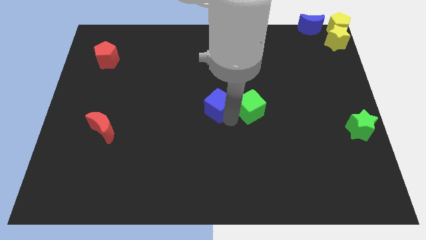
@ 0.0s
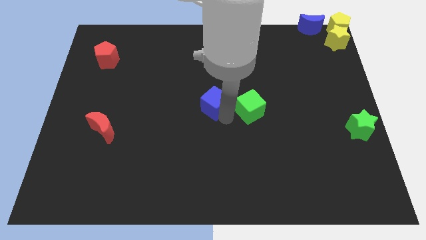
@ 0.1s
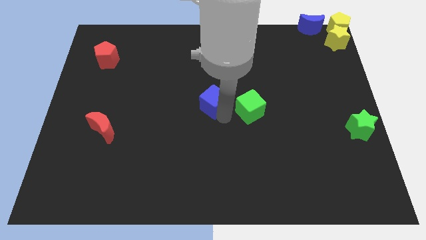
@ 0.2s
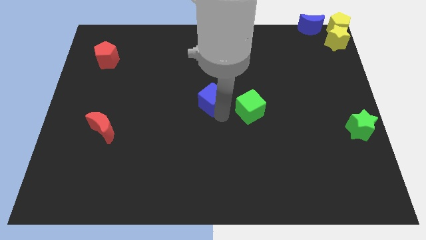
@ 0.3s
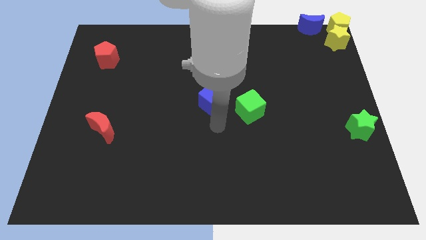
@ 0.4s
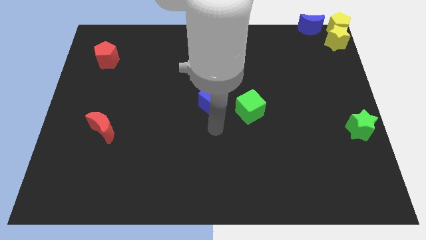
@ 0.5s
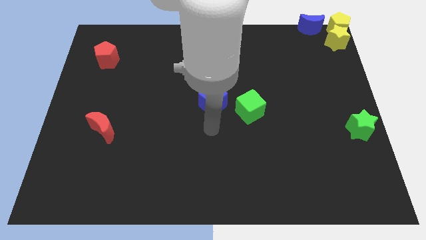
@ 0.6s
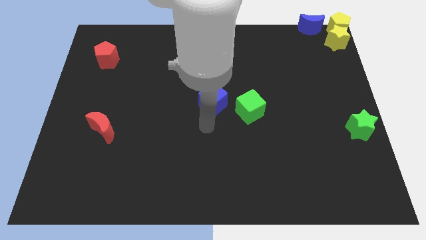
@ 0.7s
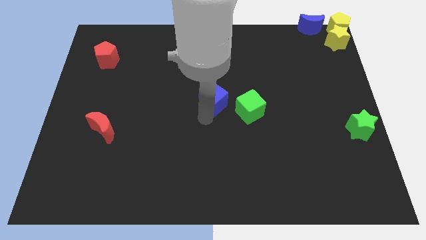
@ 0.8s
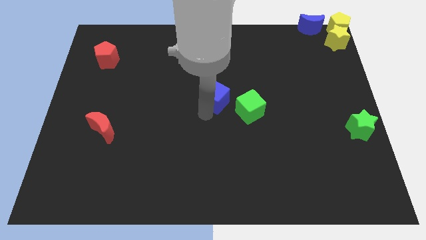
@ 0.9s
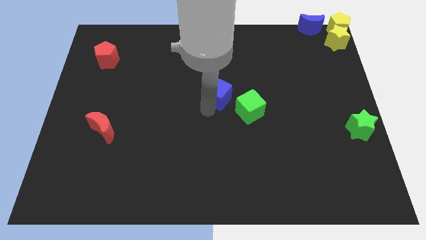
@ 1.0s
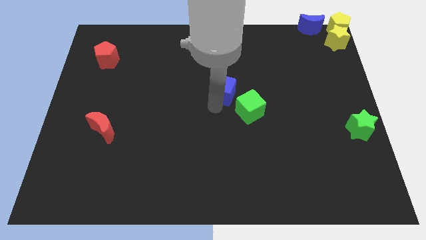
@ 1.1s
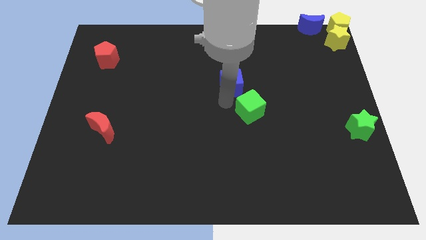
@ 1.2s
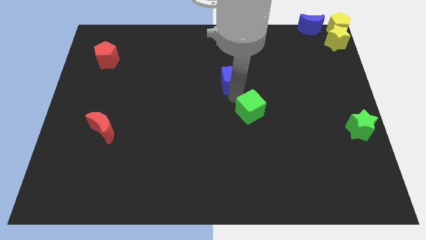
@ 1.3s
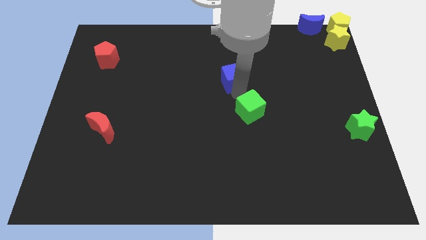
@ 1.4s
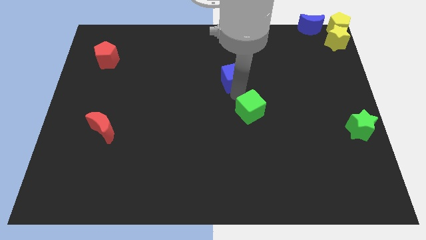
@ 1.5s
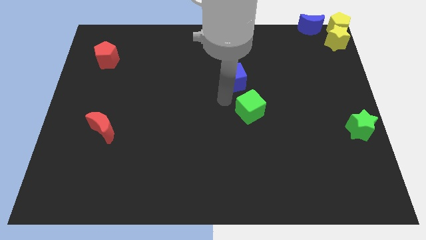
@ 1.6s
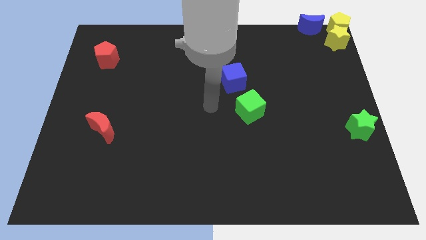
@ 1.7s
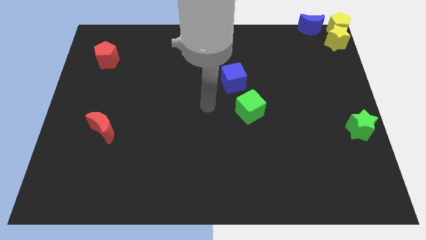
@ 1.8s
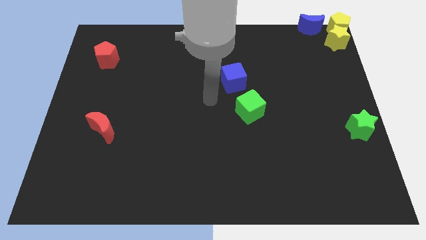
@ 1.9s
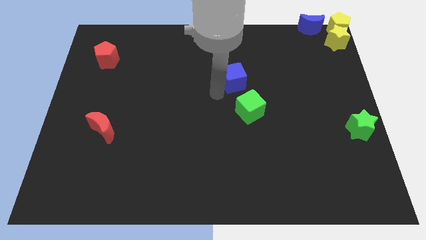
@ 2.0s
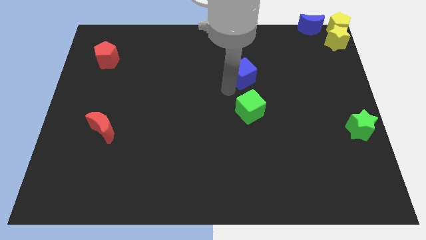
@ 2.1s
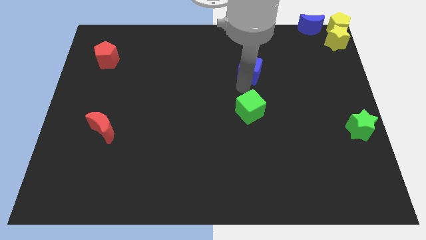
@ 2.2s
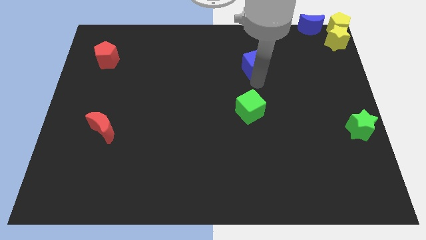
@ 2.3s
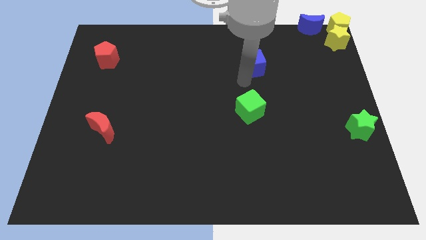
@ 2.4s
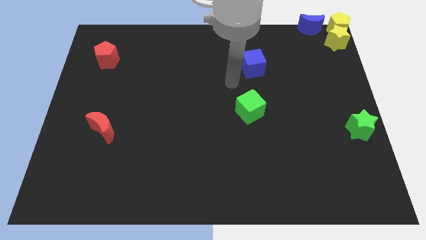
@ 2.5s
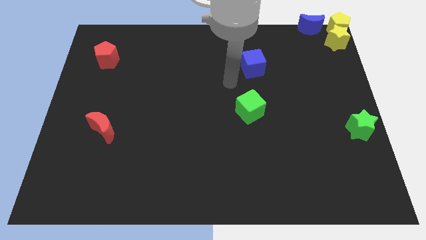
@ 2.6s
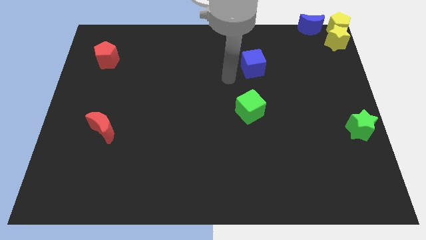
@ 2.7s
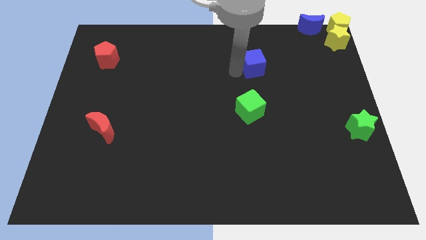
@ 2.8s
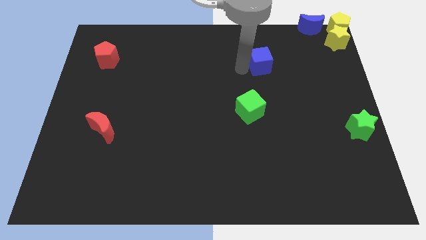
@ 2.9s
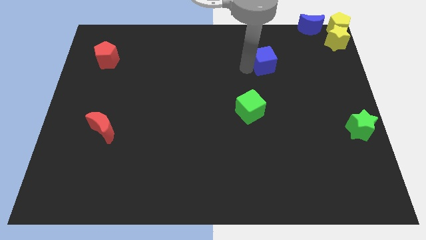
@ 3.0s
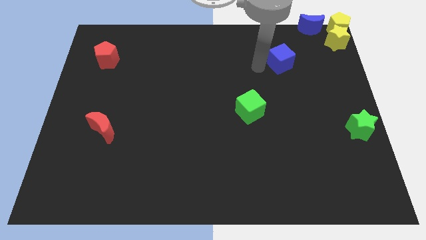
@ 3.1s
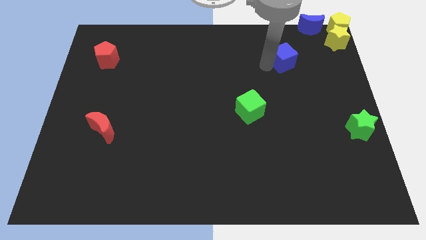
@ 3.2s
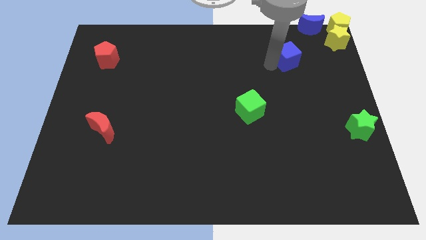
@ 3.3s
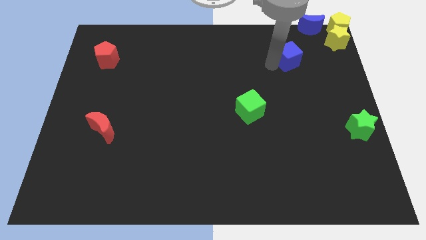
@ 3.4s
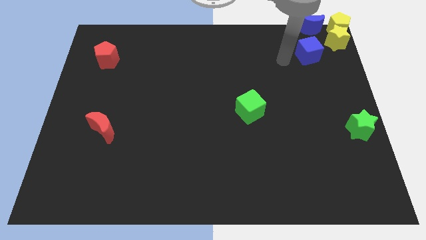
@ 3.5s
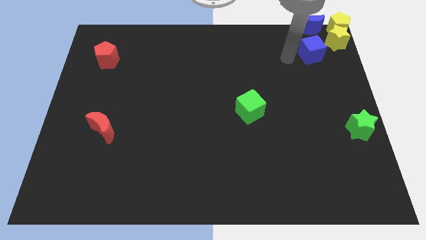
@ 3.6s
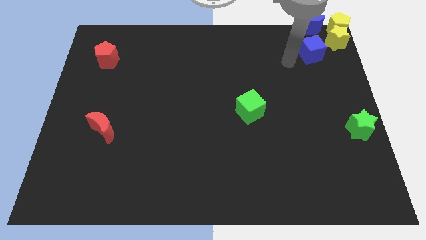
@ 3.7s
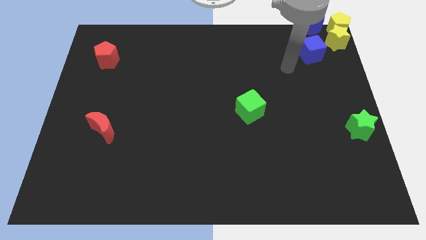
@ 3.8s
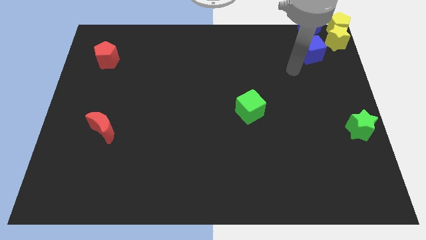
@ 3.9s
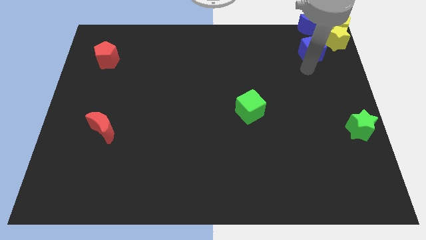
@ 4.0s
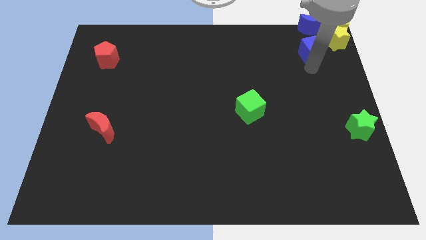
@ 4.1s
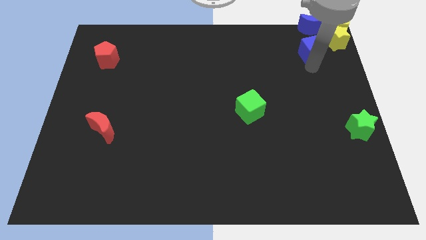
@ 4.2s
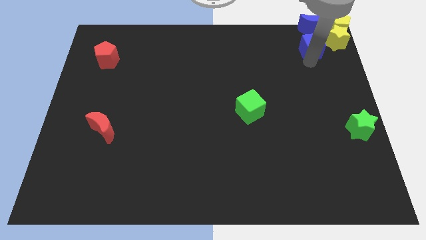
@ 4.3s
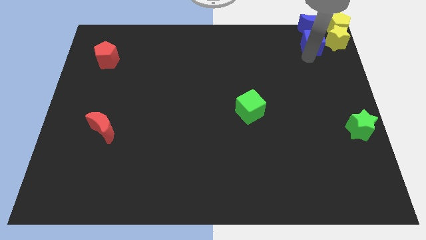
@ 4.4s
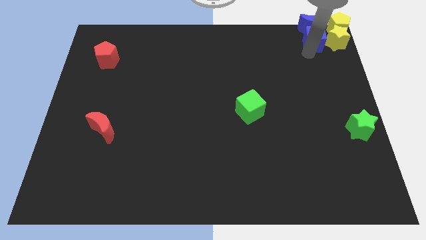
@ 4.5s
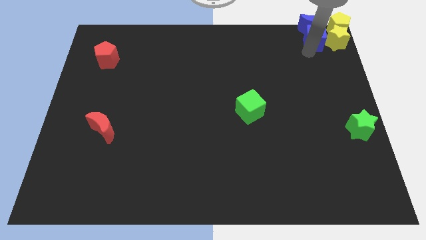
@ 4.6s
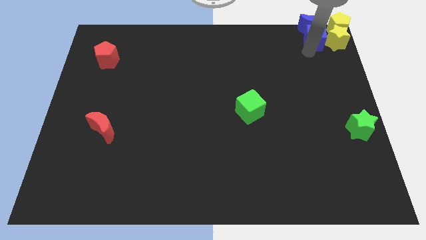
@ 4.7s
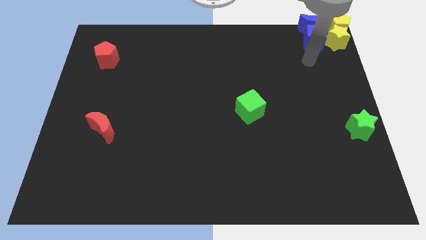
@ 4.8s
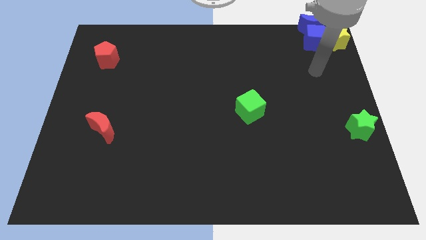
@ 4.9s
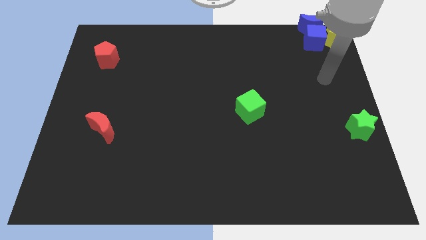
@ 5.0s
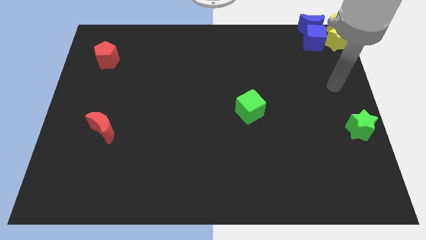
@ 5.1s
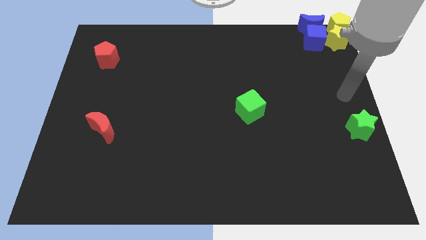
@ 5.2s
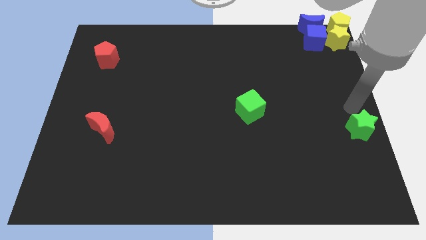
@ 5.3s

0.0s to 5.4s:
place the blue cube left to the yellow star

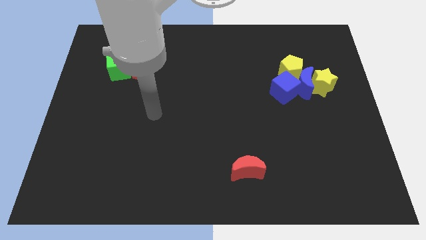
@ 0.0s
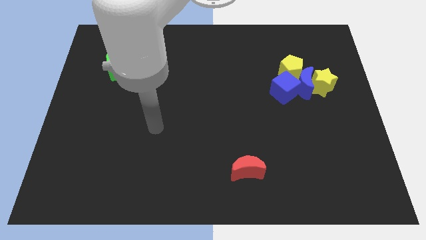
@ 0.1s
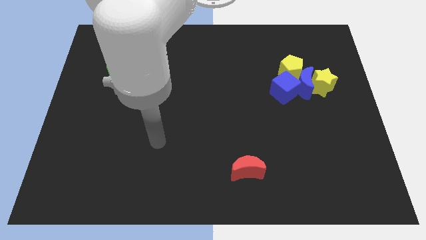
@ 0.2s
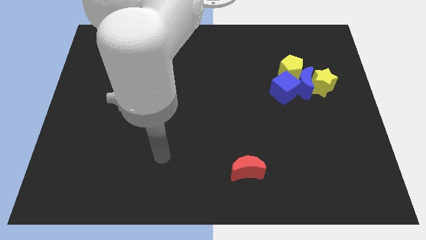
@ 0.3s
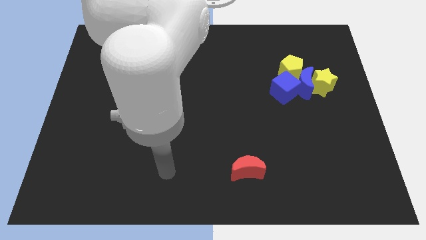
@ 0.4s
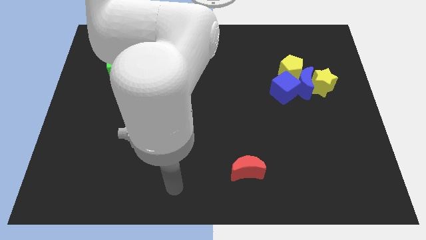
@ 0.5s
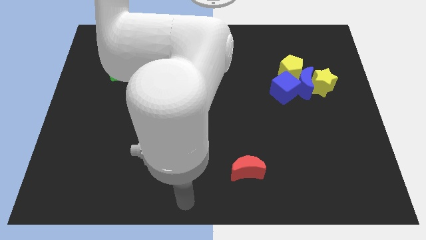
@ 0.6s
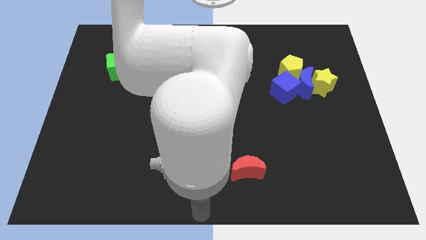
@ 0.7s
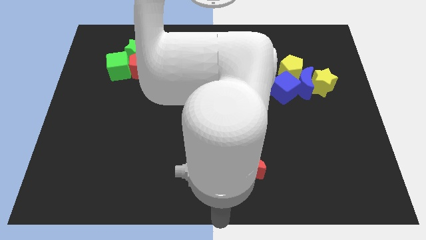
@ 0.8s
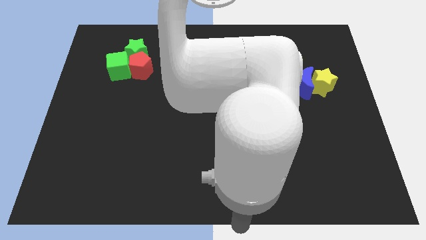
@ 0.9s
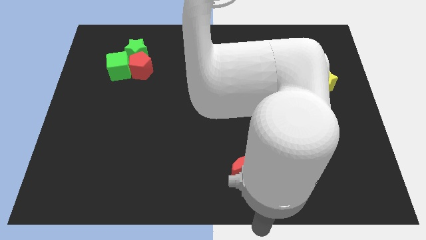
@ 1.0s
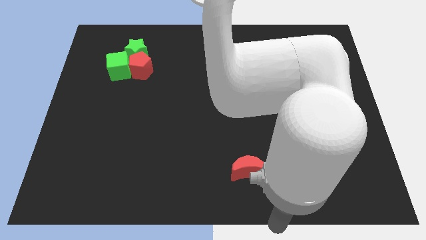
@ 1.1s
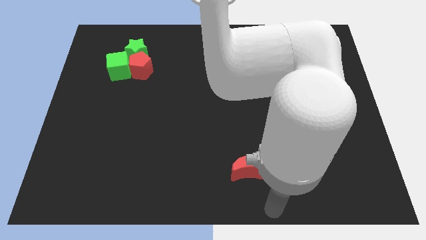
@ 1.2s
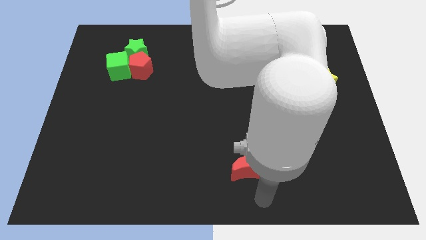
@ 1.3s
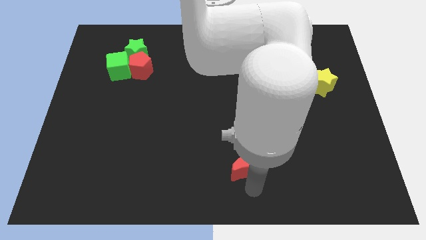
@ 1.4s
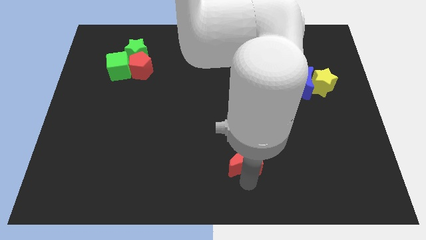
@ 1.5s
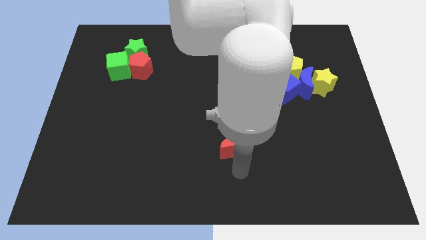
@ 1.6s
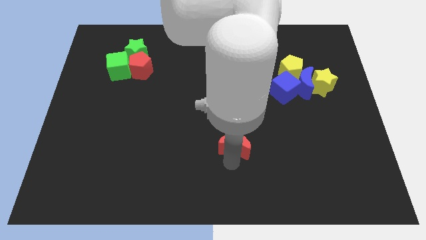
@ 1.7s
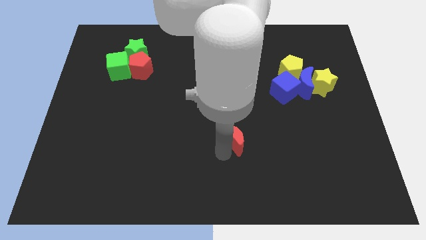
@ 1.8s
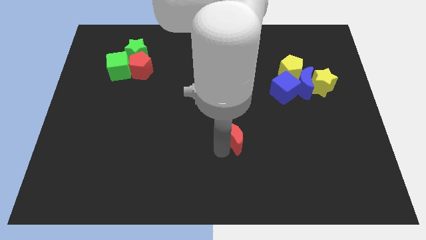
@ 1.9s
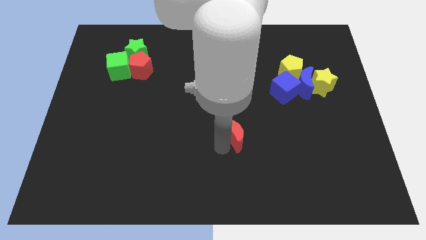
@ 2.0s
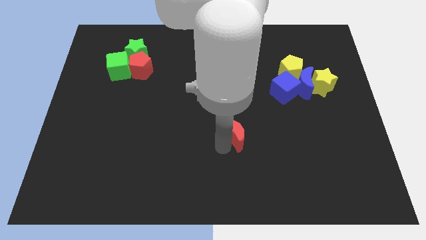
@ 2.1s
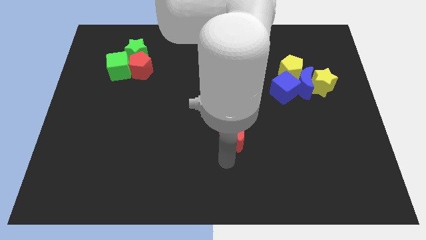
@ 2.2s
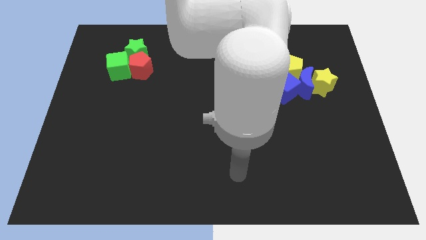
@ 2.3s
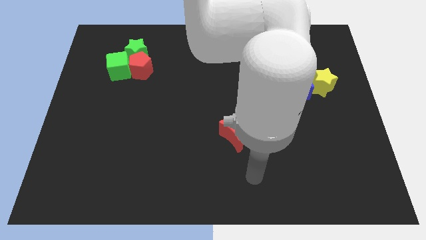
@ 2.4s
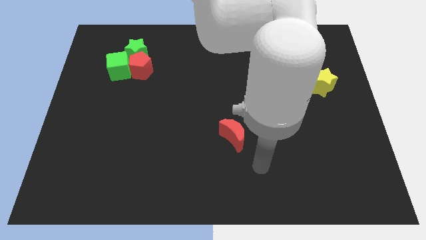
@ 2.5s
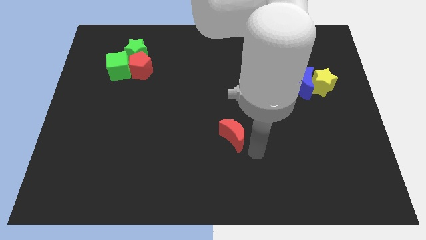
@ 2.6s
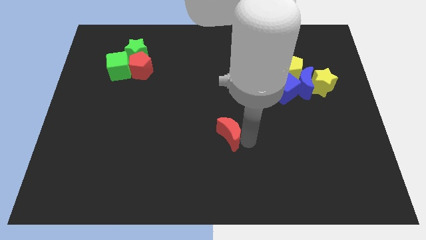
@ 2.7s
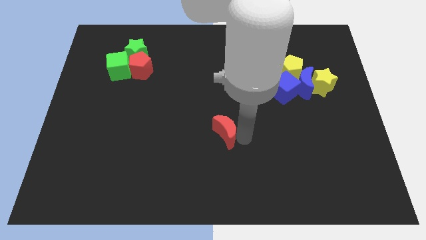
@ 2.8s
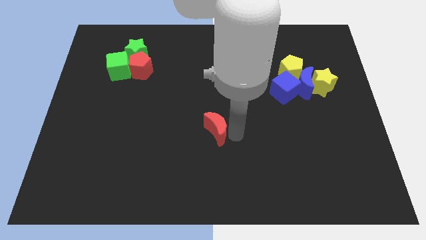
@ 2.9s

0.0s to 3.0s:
move the red crescent to the bottom left of the blue cube

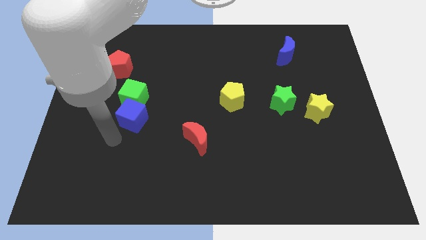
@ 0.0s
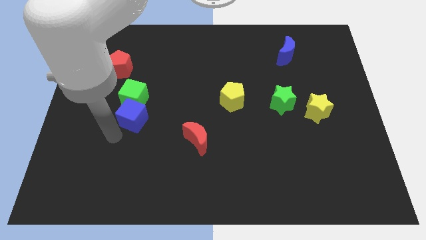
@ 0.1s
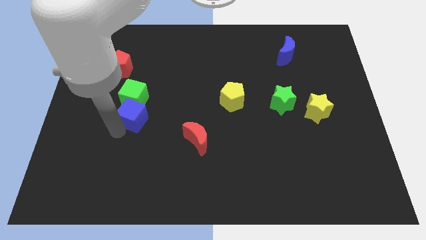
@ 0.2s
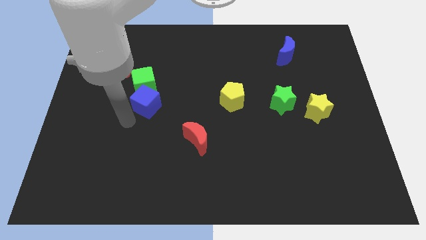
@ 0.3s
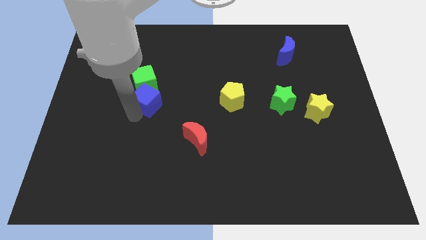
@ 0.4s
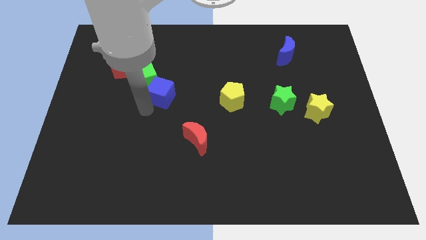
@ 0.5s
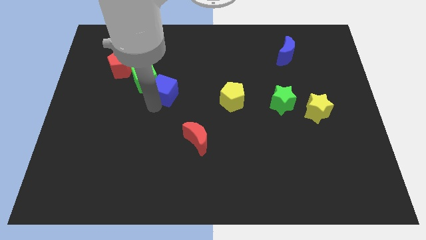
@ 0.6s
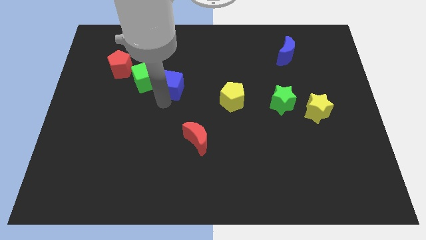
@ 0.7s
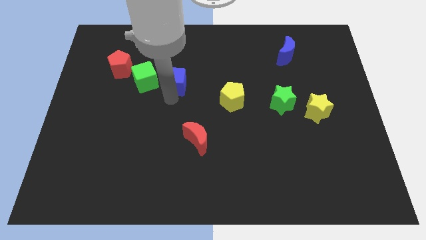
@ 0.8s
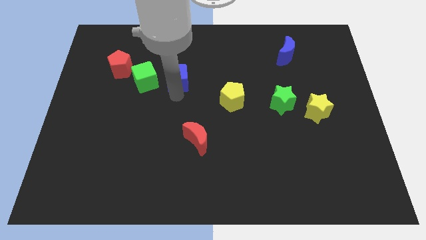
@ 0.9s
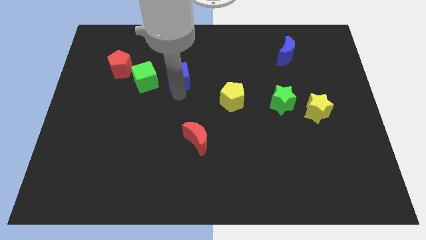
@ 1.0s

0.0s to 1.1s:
separate green and blue cubes
